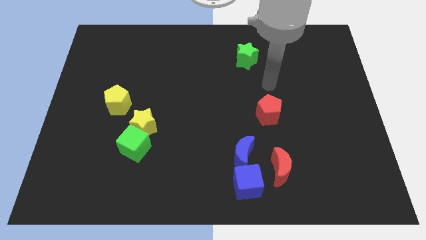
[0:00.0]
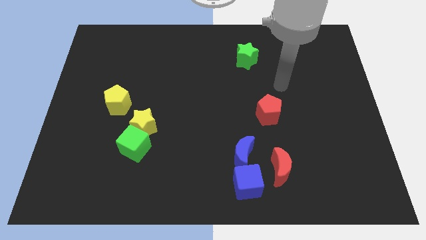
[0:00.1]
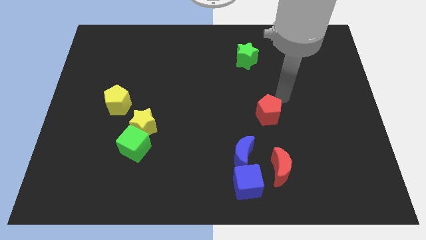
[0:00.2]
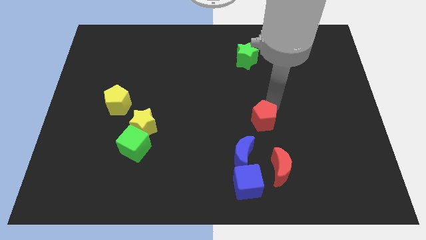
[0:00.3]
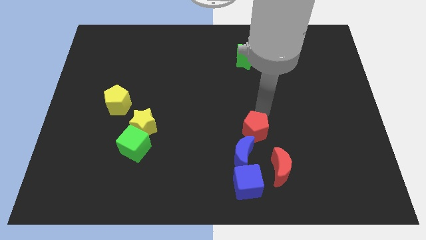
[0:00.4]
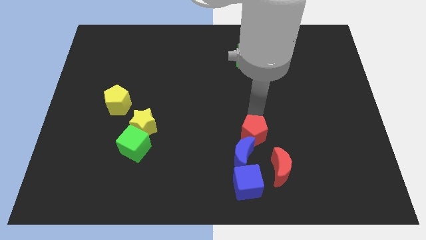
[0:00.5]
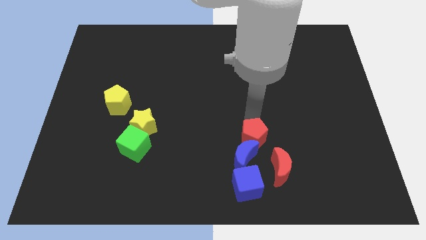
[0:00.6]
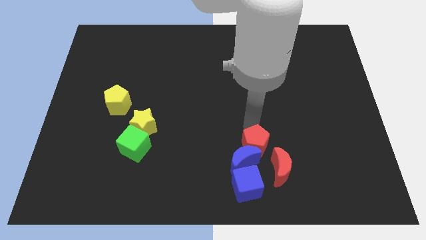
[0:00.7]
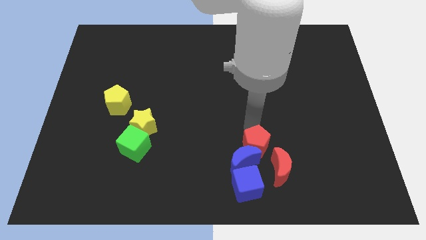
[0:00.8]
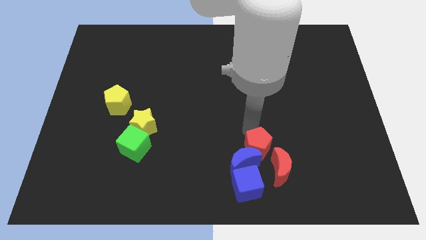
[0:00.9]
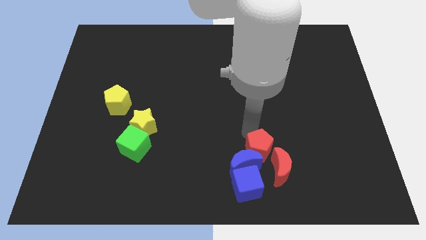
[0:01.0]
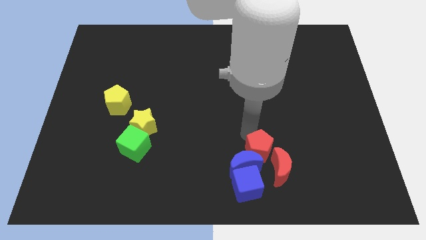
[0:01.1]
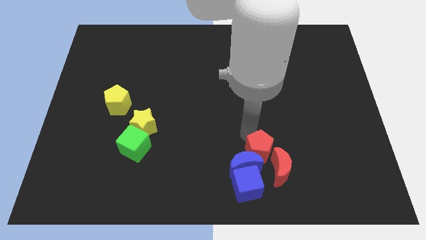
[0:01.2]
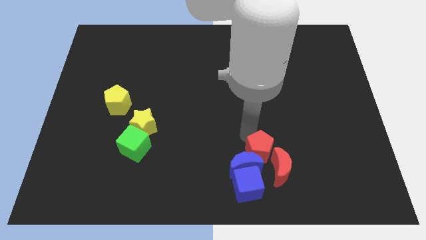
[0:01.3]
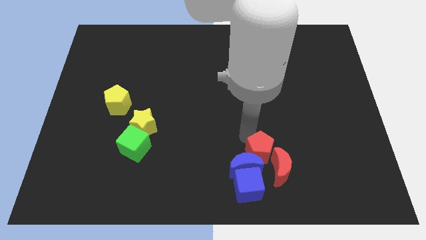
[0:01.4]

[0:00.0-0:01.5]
add the red pentagon to the group of both blue blocks and red moon

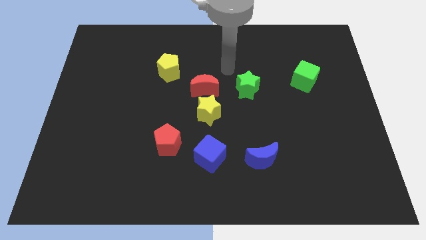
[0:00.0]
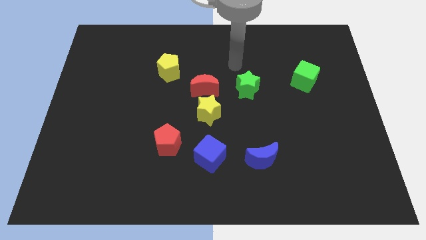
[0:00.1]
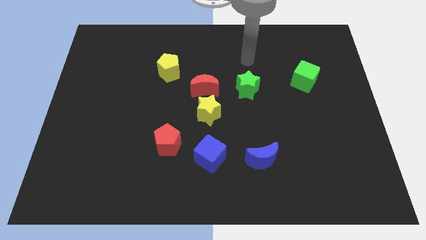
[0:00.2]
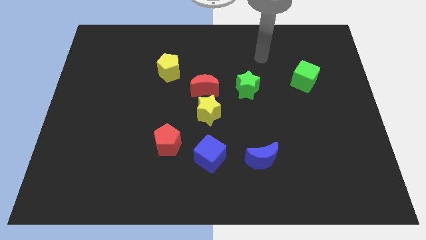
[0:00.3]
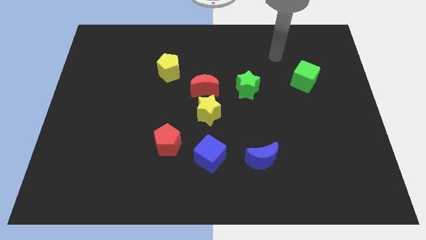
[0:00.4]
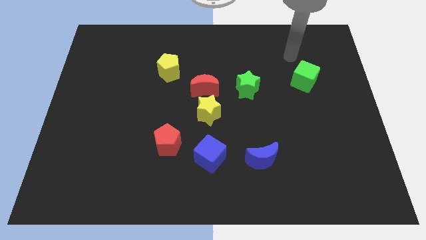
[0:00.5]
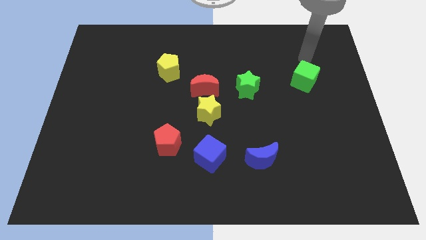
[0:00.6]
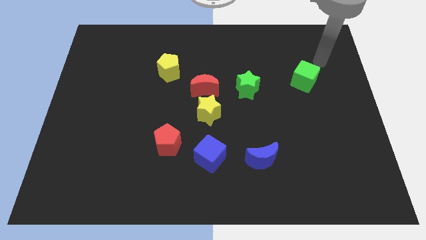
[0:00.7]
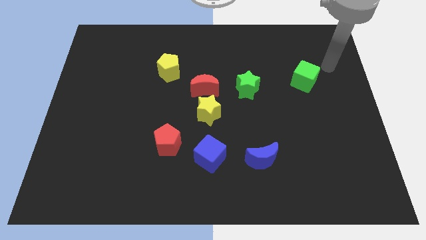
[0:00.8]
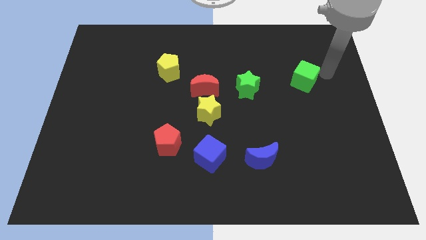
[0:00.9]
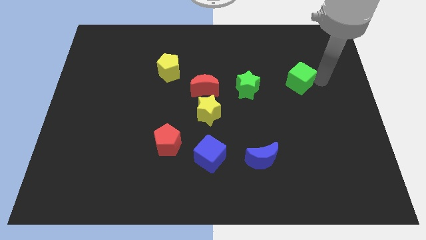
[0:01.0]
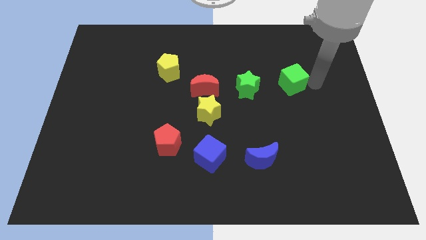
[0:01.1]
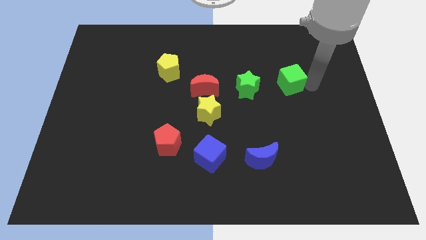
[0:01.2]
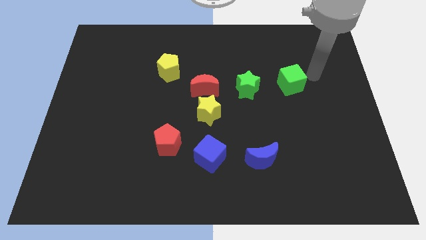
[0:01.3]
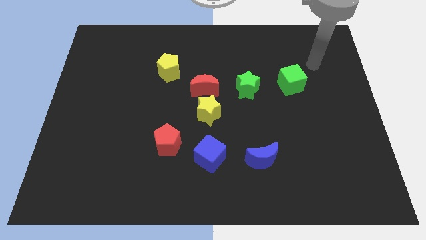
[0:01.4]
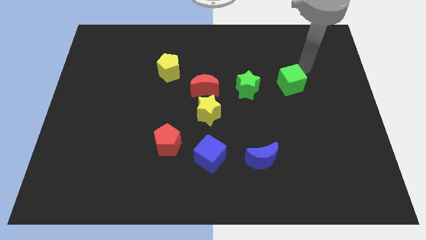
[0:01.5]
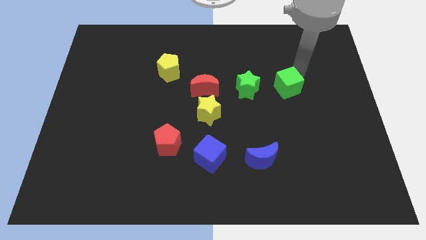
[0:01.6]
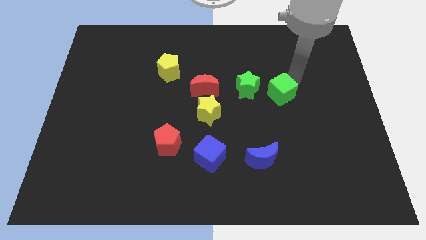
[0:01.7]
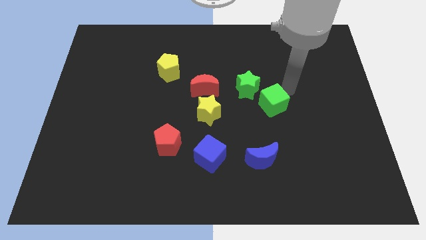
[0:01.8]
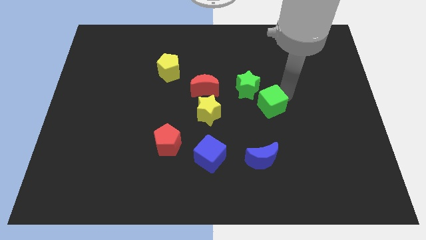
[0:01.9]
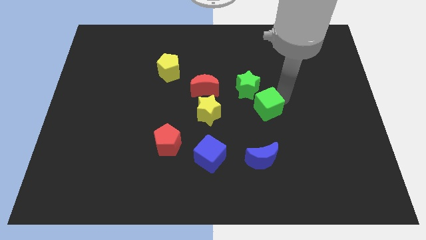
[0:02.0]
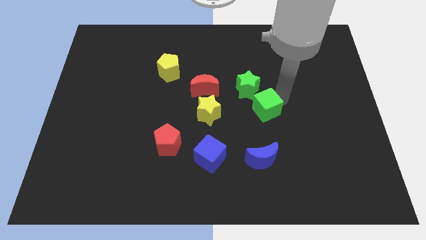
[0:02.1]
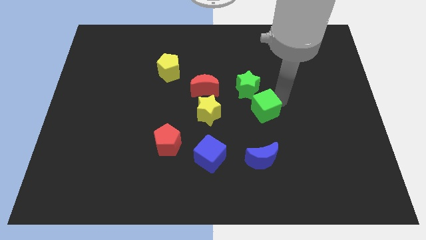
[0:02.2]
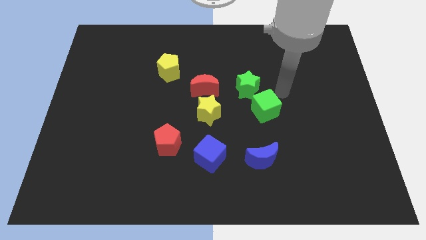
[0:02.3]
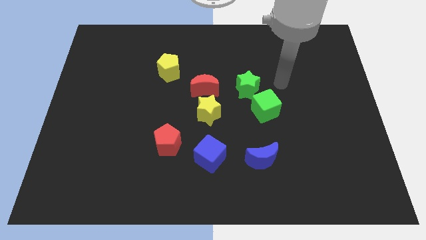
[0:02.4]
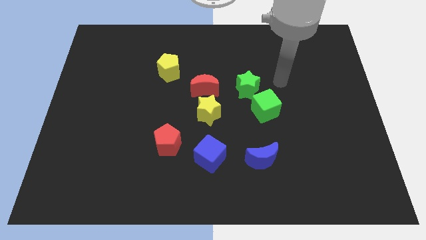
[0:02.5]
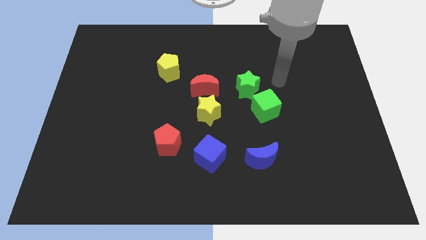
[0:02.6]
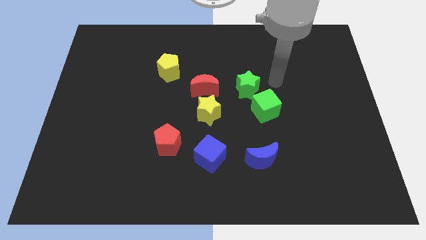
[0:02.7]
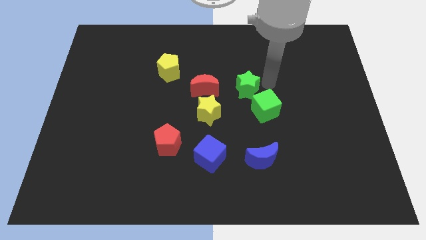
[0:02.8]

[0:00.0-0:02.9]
move the green cube to the bottom right of the green star

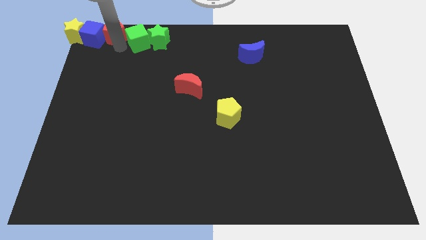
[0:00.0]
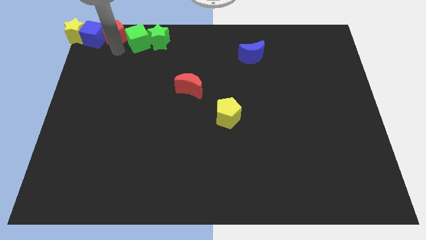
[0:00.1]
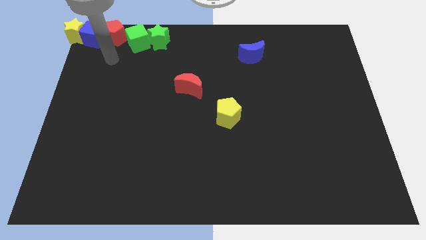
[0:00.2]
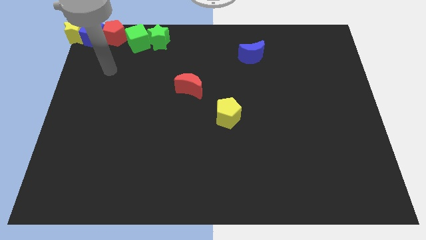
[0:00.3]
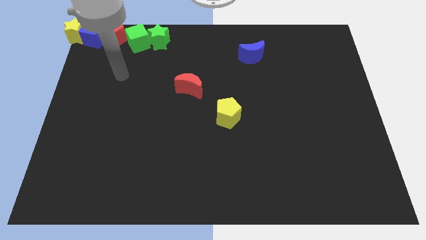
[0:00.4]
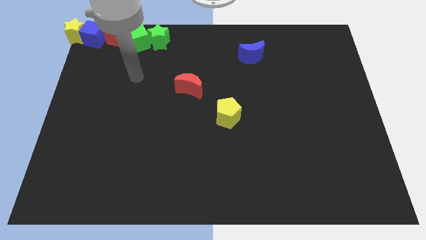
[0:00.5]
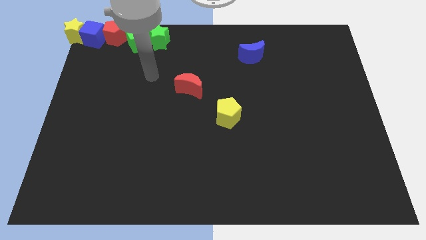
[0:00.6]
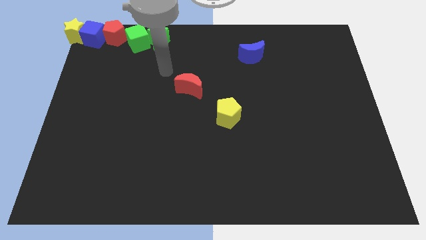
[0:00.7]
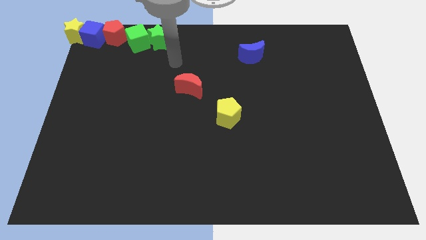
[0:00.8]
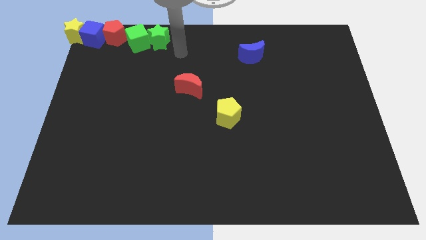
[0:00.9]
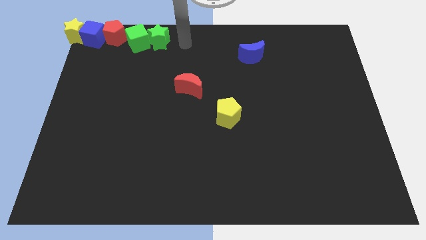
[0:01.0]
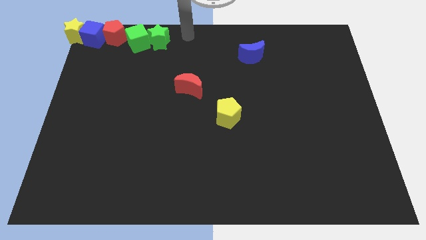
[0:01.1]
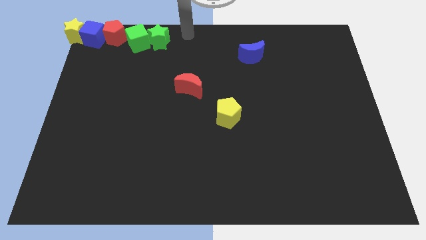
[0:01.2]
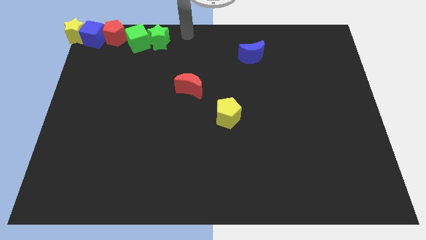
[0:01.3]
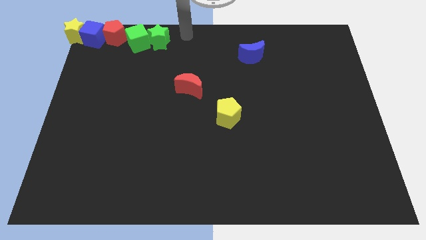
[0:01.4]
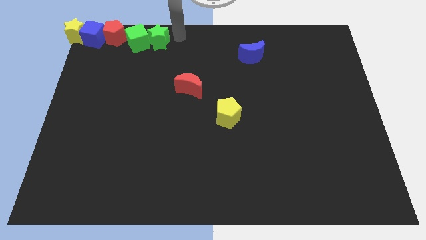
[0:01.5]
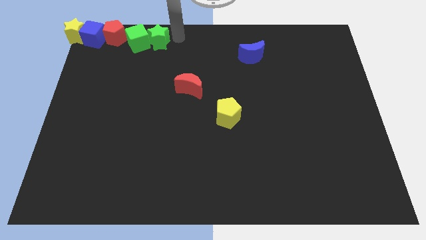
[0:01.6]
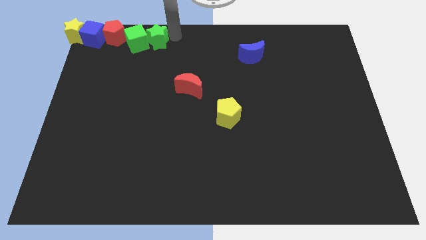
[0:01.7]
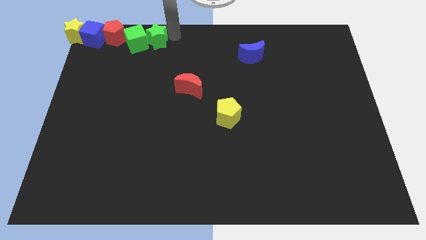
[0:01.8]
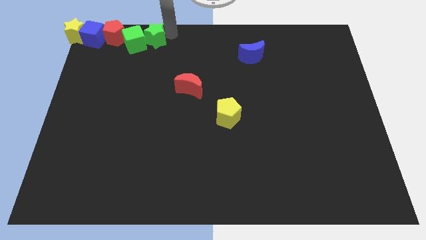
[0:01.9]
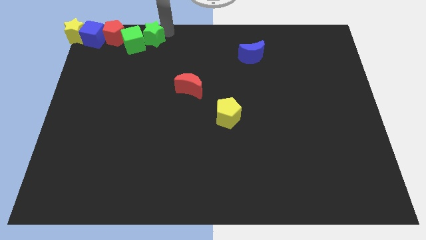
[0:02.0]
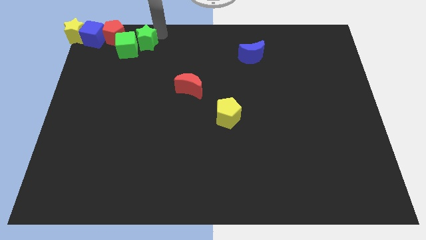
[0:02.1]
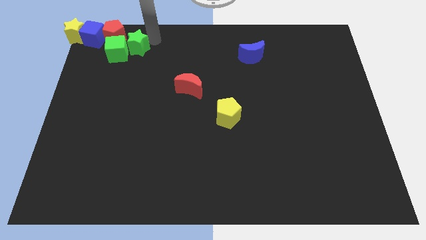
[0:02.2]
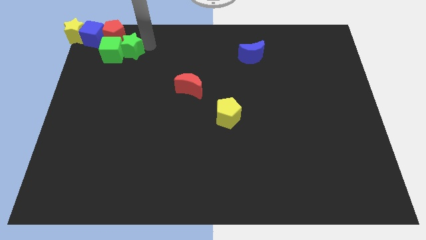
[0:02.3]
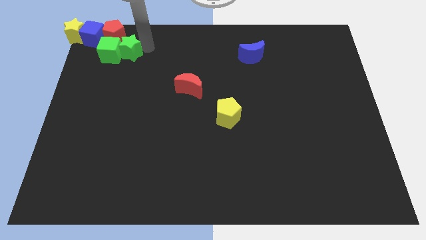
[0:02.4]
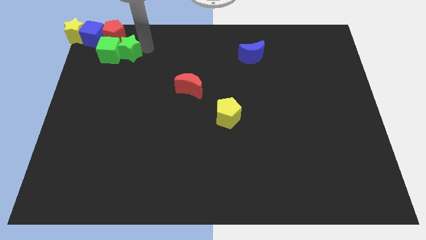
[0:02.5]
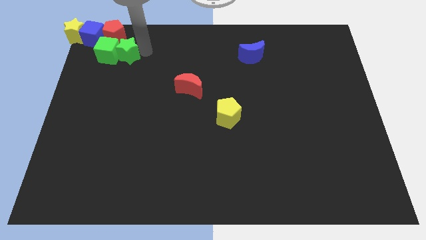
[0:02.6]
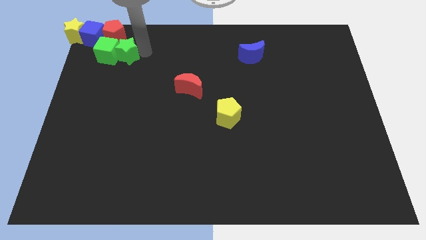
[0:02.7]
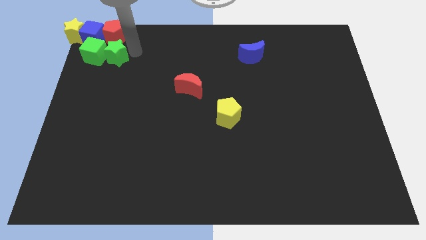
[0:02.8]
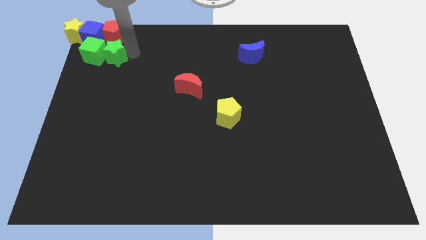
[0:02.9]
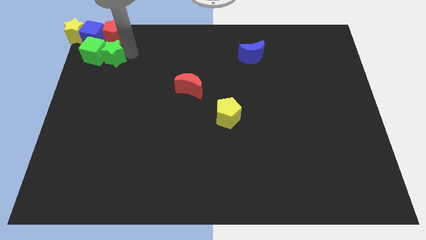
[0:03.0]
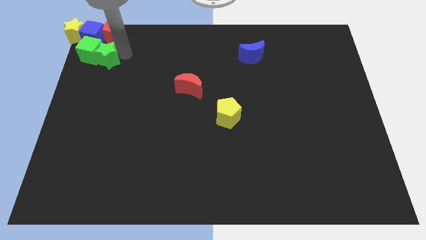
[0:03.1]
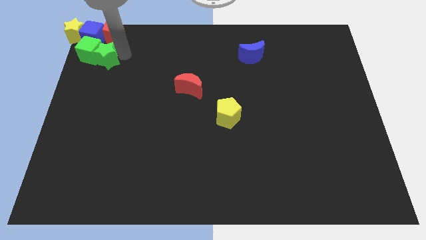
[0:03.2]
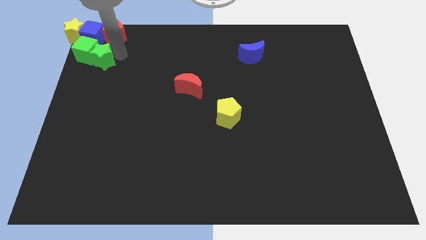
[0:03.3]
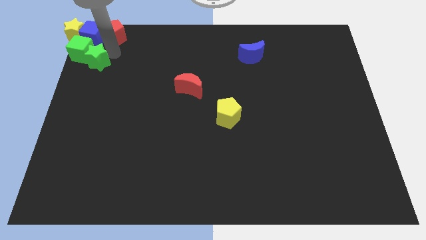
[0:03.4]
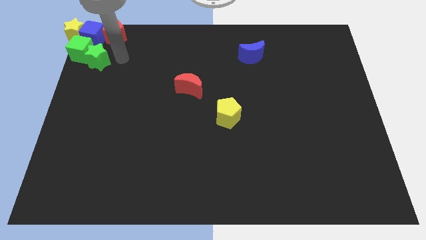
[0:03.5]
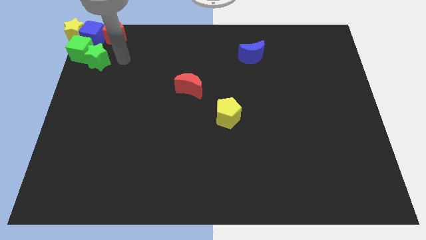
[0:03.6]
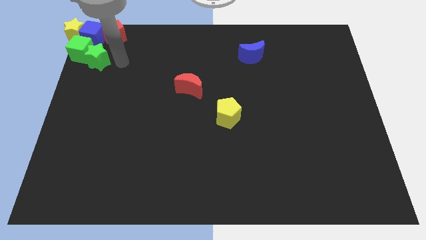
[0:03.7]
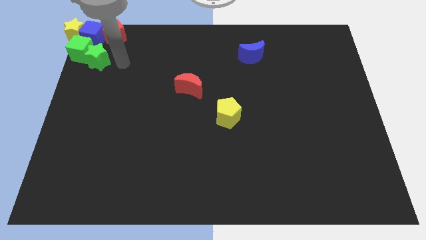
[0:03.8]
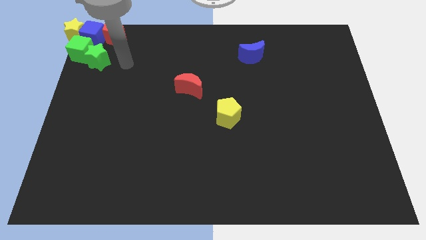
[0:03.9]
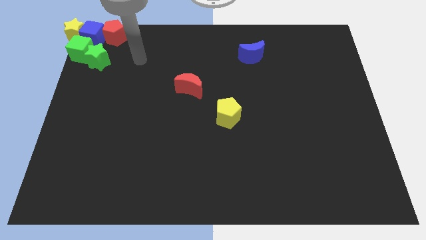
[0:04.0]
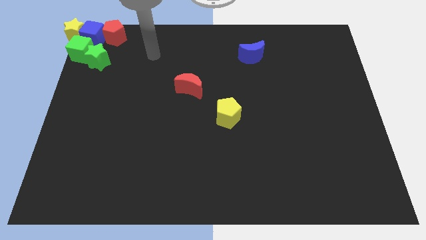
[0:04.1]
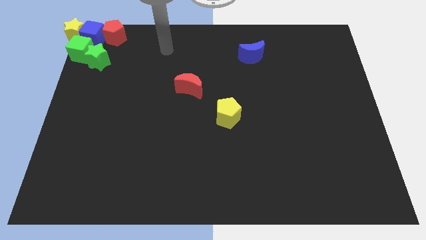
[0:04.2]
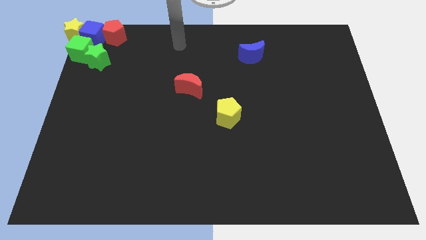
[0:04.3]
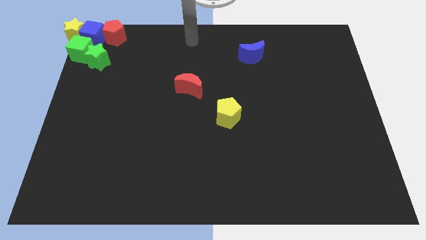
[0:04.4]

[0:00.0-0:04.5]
place green star and green cube to the bottom of blue cube
